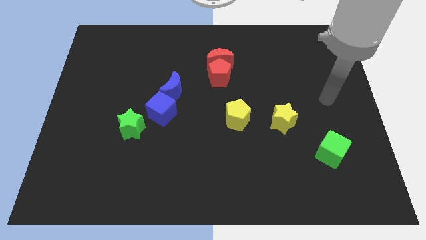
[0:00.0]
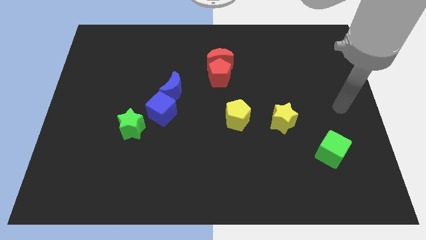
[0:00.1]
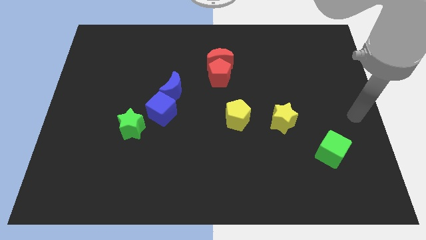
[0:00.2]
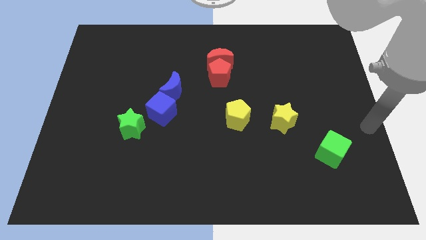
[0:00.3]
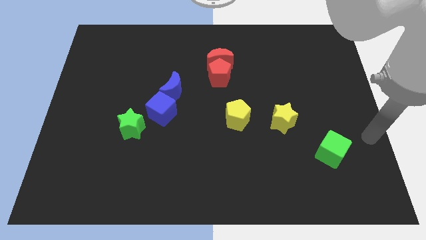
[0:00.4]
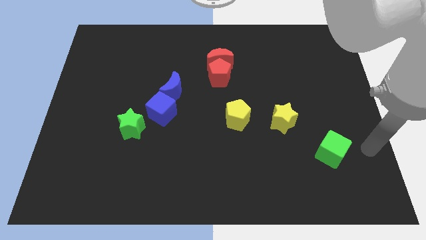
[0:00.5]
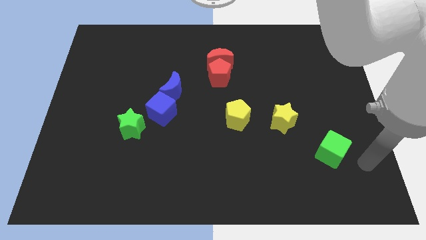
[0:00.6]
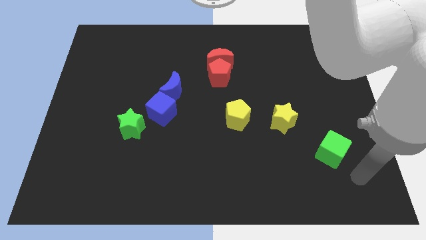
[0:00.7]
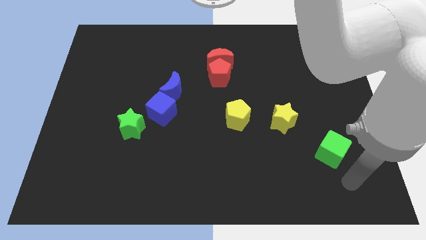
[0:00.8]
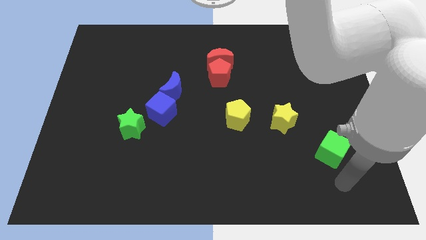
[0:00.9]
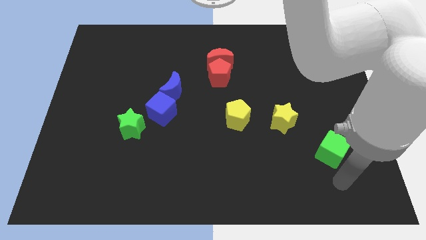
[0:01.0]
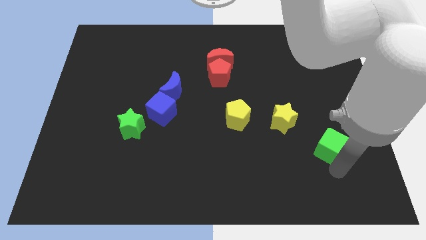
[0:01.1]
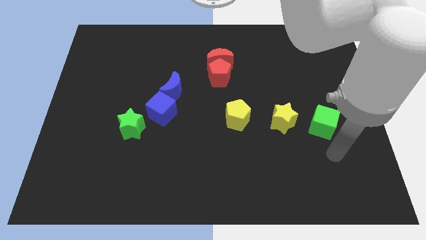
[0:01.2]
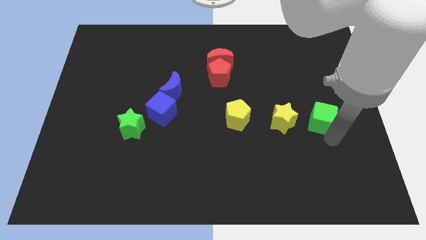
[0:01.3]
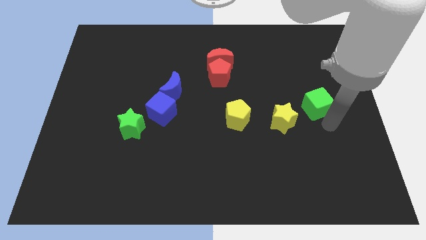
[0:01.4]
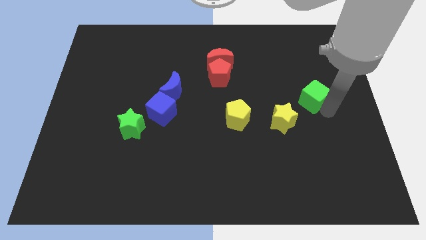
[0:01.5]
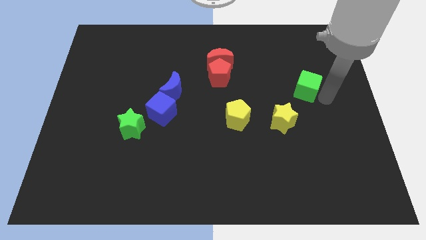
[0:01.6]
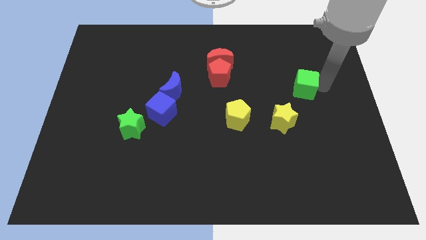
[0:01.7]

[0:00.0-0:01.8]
push the green cube towards the top side of the board

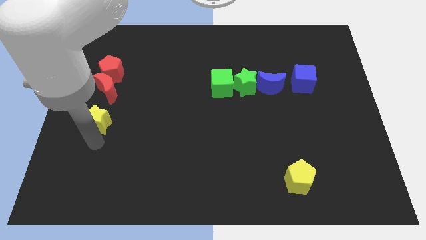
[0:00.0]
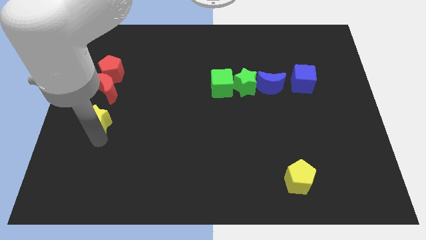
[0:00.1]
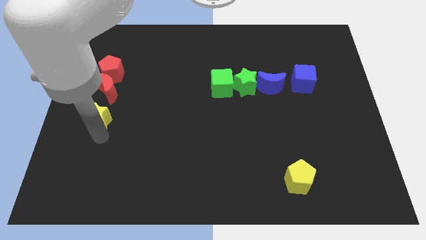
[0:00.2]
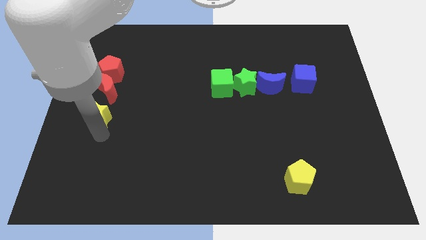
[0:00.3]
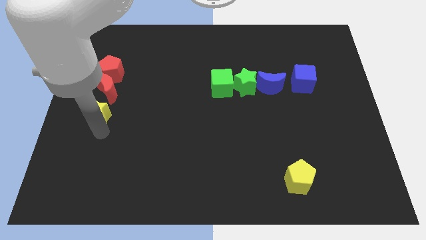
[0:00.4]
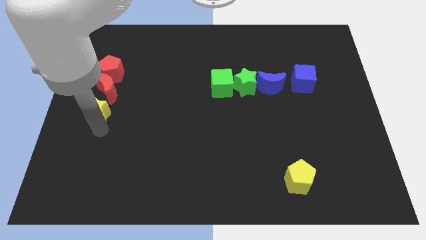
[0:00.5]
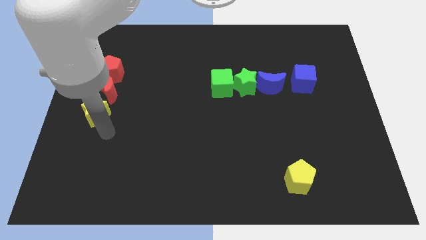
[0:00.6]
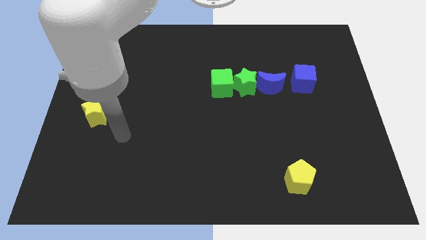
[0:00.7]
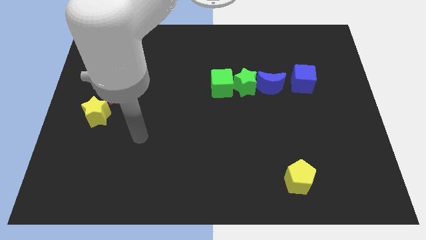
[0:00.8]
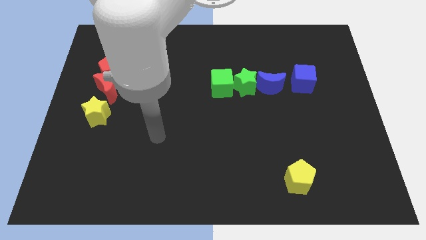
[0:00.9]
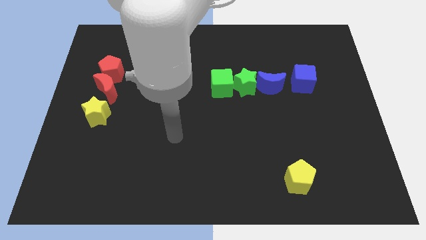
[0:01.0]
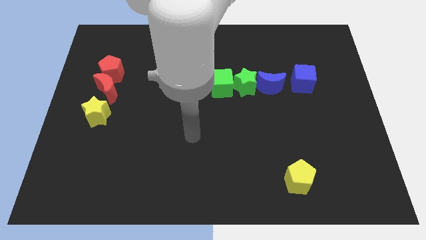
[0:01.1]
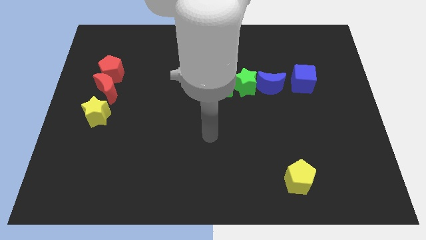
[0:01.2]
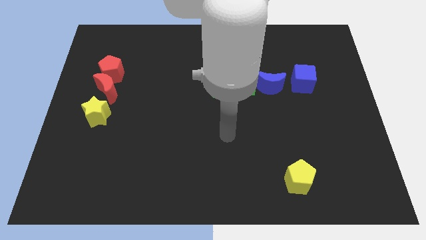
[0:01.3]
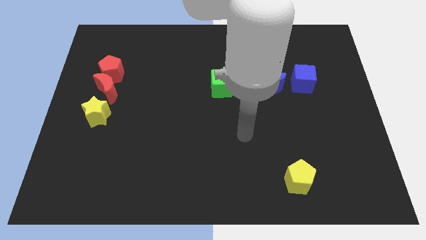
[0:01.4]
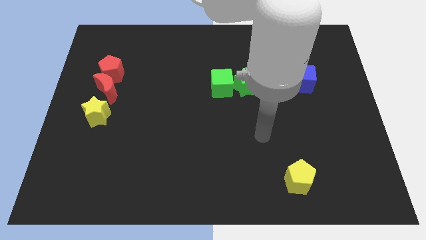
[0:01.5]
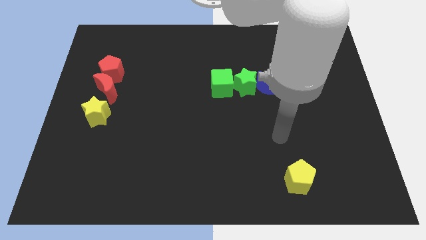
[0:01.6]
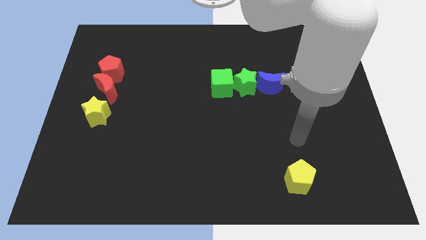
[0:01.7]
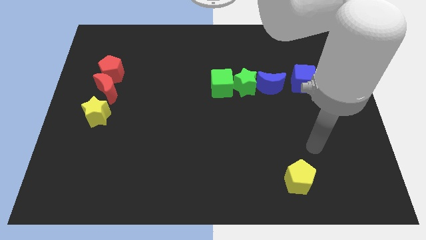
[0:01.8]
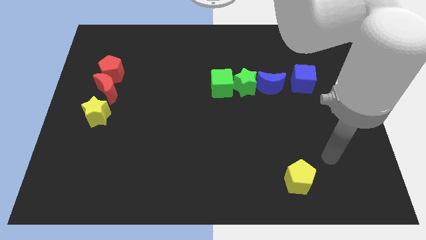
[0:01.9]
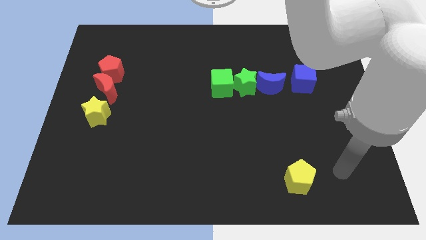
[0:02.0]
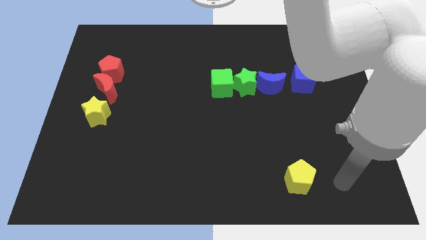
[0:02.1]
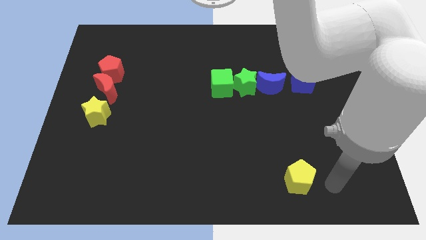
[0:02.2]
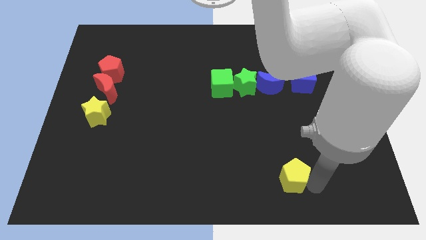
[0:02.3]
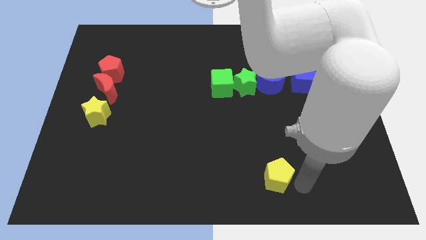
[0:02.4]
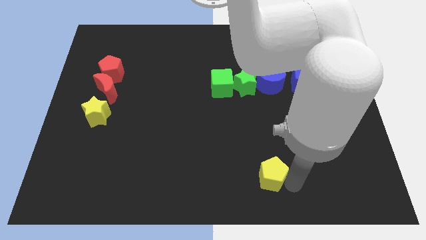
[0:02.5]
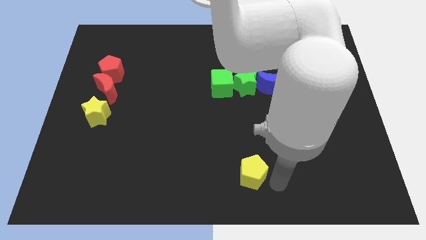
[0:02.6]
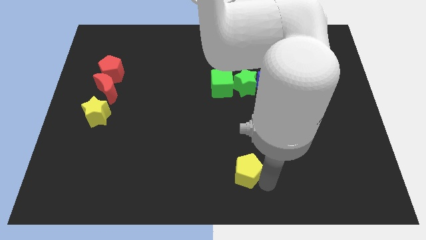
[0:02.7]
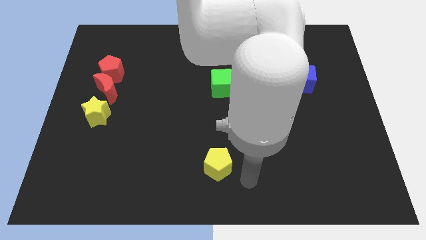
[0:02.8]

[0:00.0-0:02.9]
place yellow pentagon to the bottom of green cube

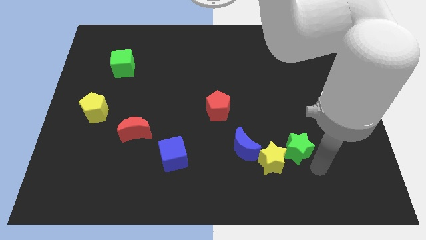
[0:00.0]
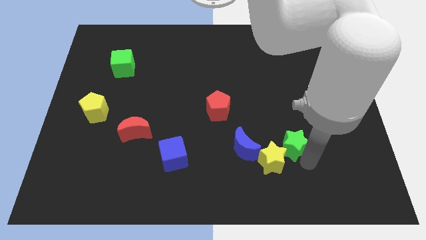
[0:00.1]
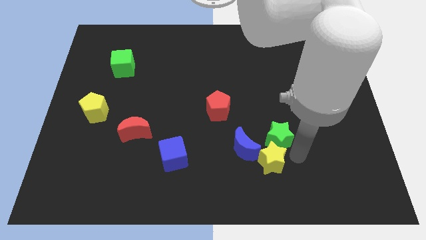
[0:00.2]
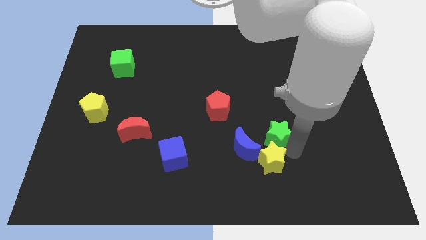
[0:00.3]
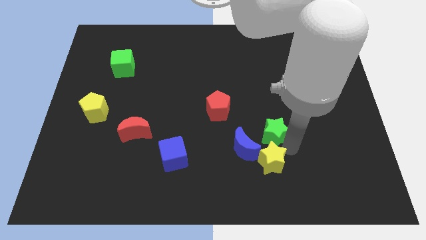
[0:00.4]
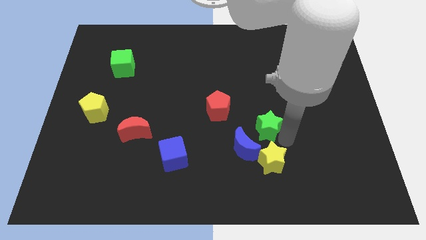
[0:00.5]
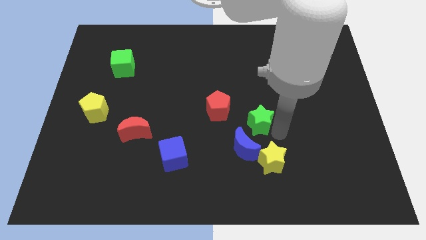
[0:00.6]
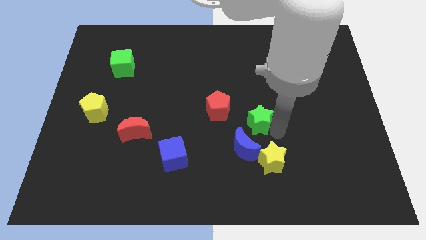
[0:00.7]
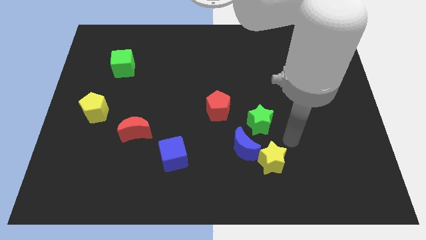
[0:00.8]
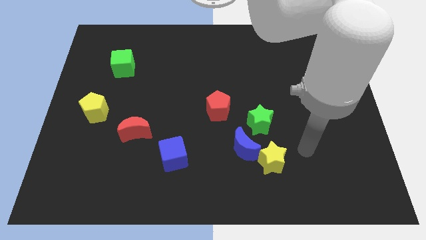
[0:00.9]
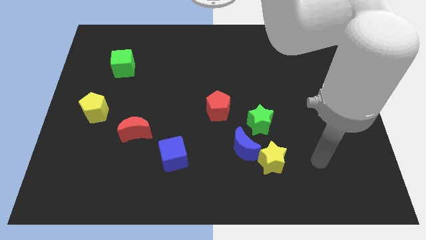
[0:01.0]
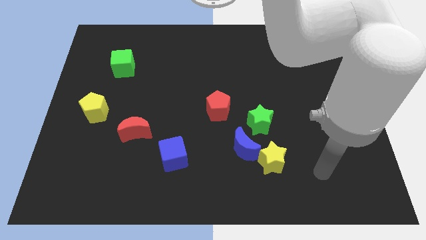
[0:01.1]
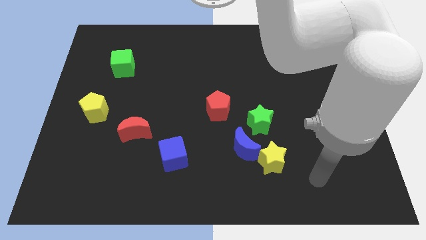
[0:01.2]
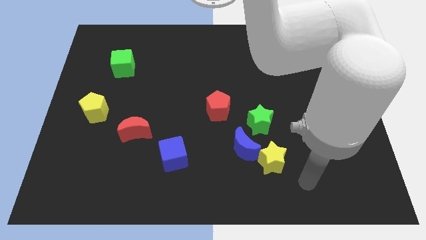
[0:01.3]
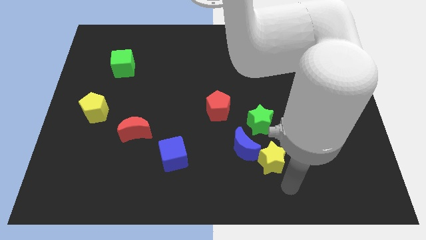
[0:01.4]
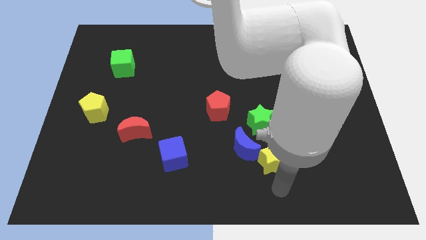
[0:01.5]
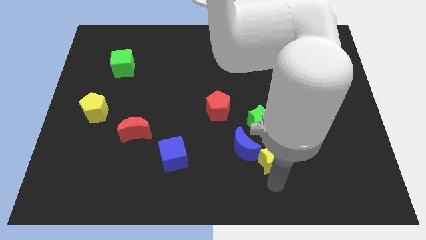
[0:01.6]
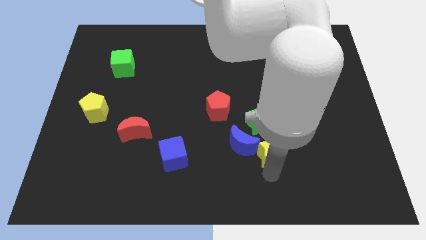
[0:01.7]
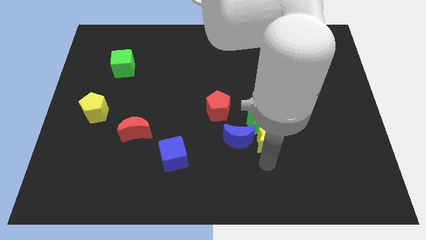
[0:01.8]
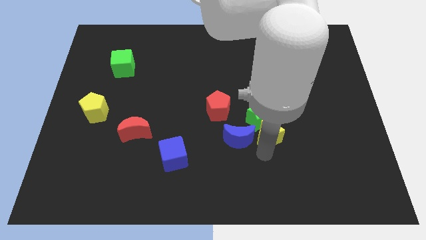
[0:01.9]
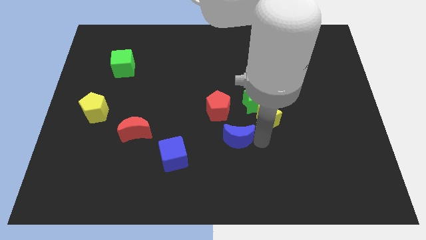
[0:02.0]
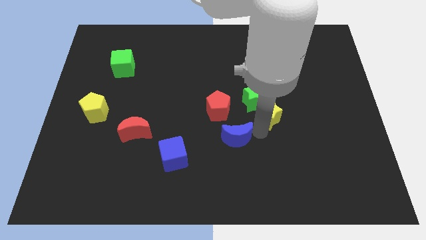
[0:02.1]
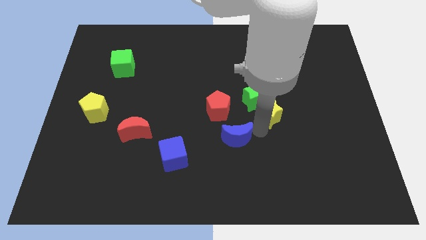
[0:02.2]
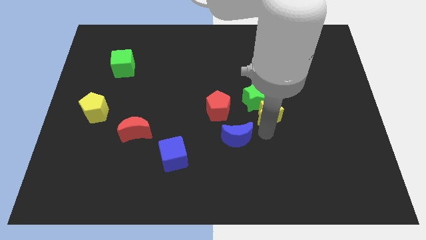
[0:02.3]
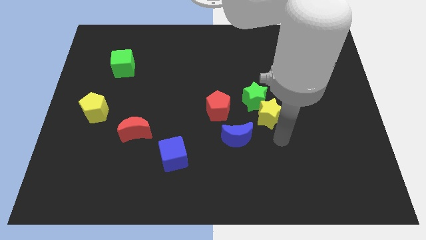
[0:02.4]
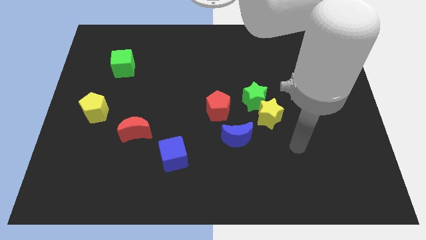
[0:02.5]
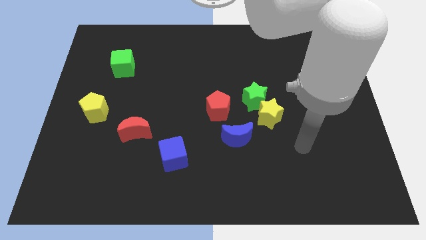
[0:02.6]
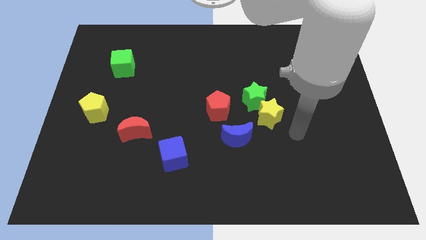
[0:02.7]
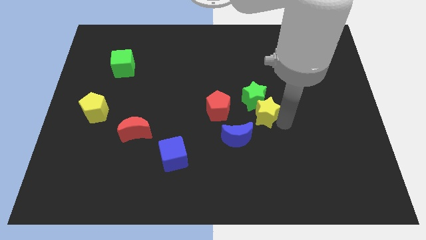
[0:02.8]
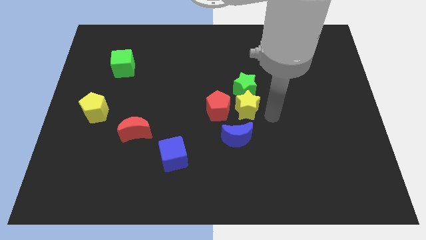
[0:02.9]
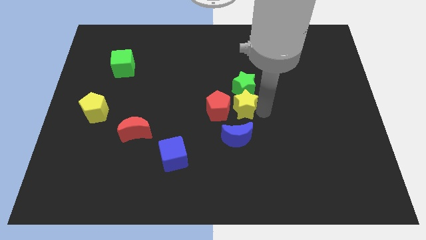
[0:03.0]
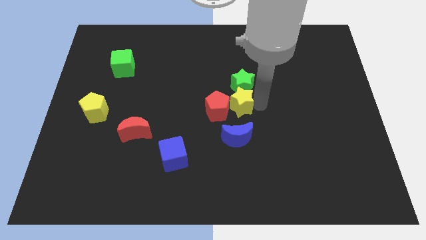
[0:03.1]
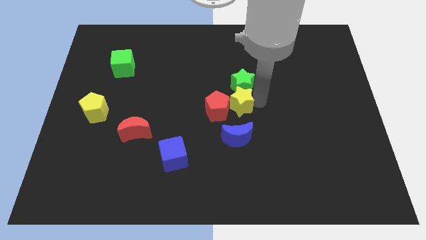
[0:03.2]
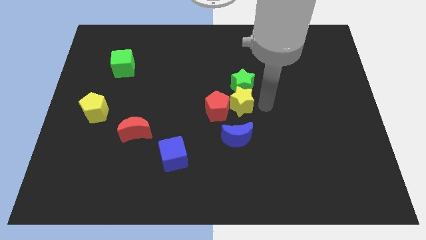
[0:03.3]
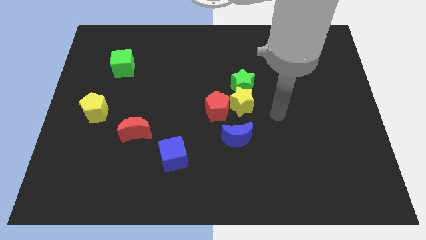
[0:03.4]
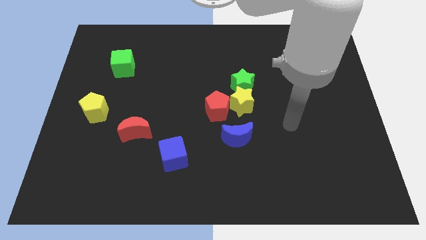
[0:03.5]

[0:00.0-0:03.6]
place the yellow star to the right of the red pentagon

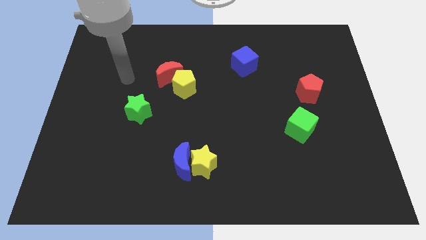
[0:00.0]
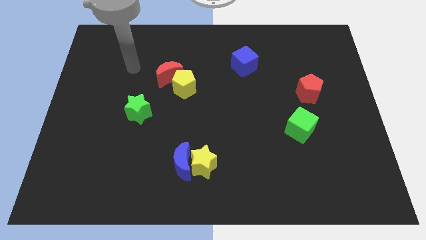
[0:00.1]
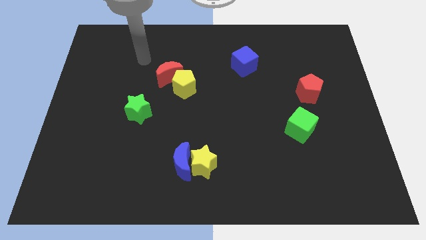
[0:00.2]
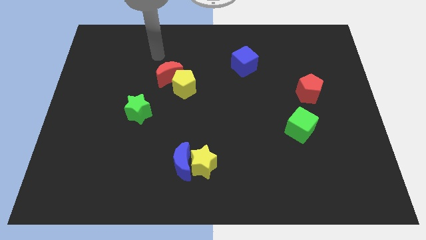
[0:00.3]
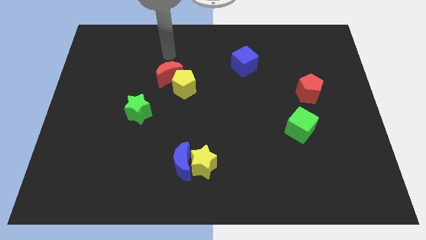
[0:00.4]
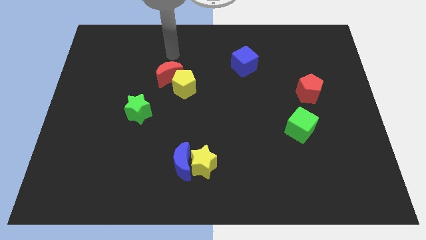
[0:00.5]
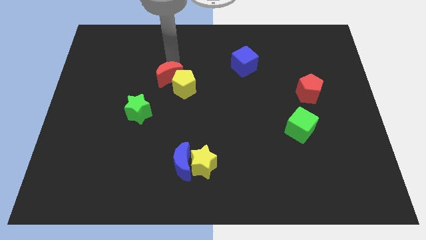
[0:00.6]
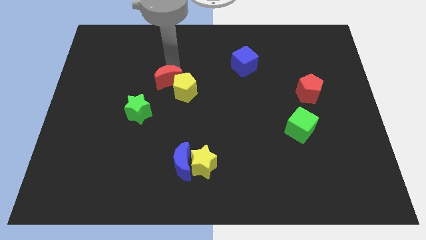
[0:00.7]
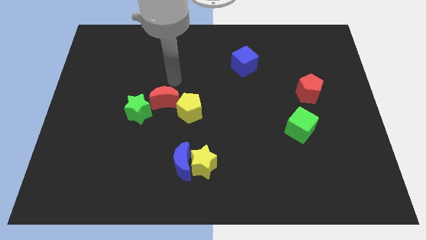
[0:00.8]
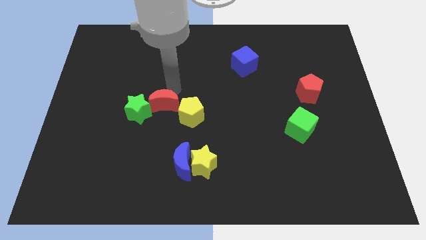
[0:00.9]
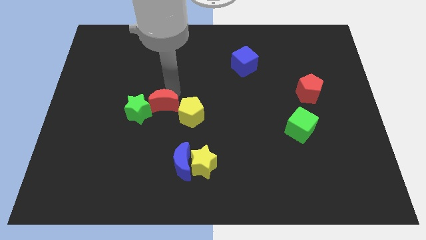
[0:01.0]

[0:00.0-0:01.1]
move the red crescent in between the yellow pentagon and the green star
